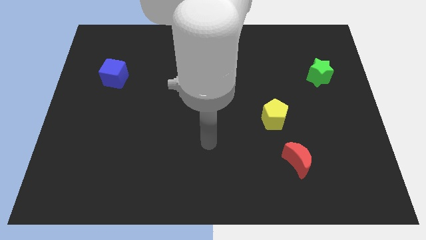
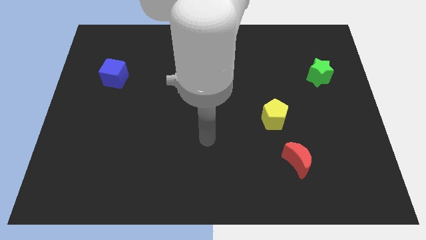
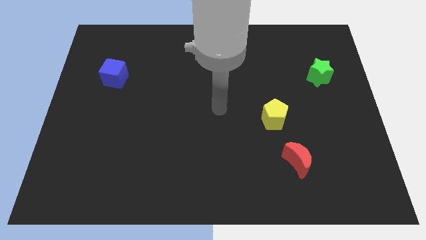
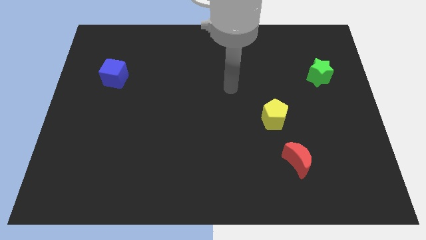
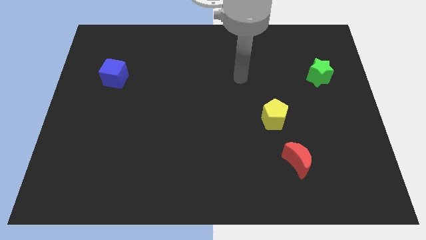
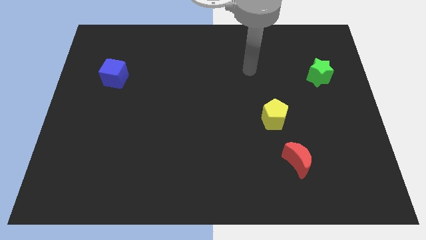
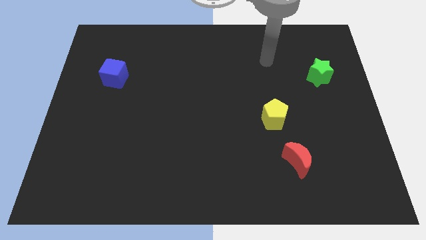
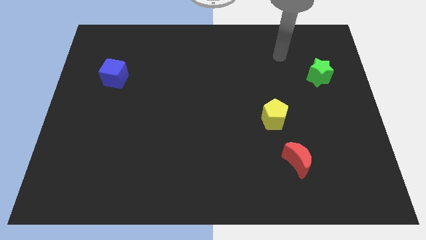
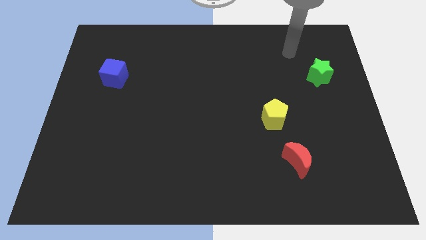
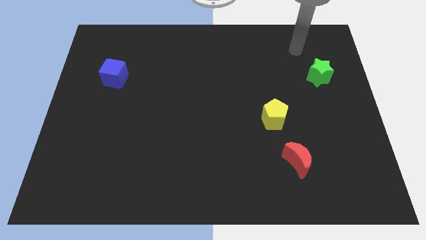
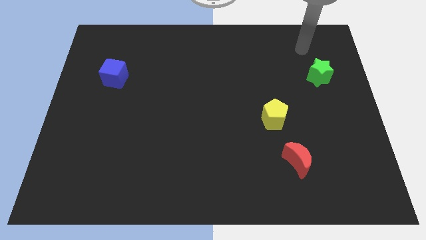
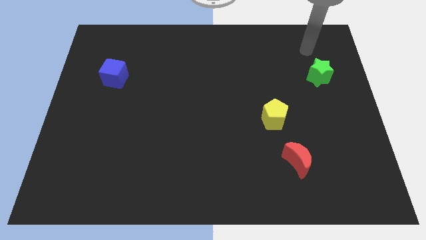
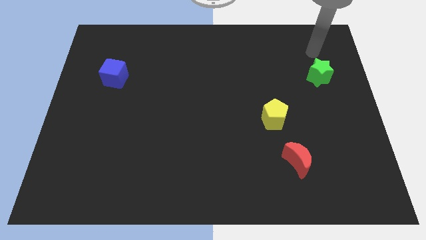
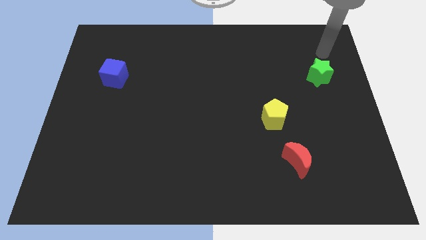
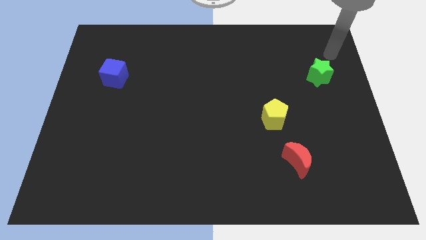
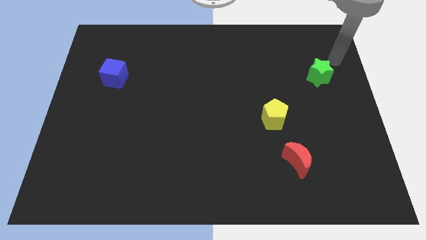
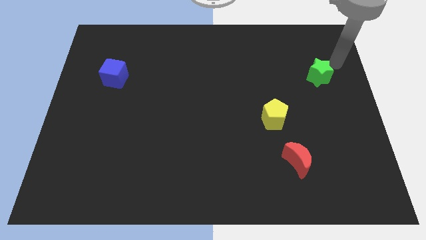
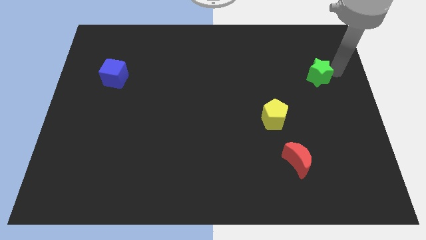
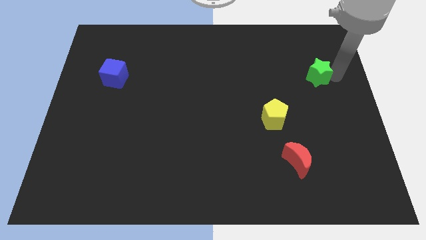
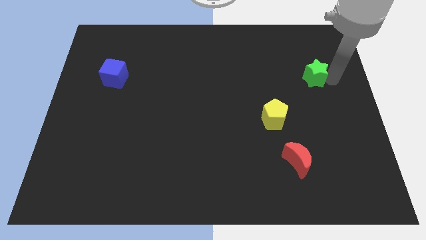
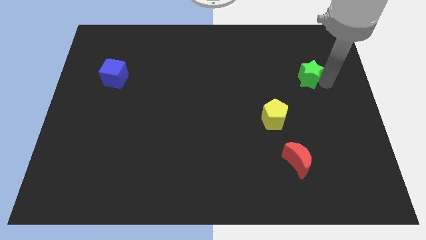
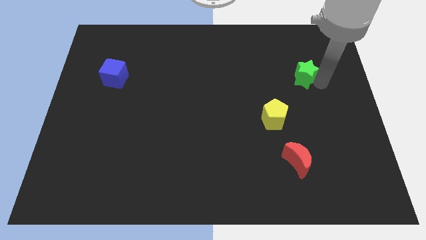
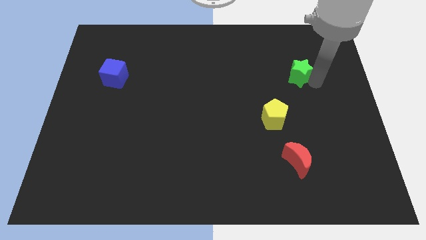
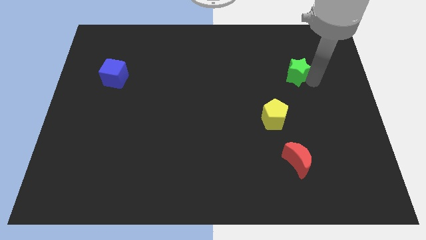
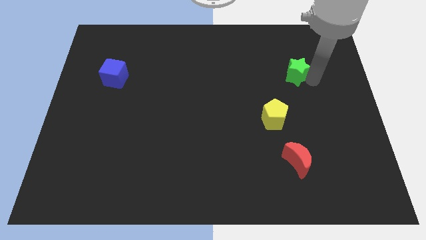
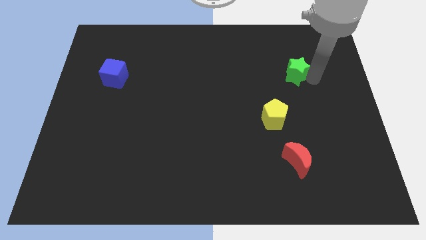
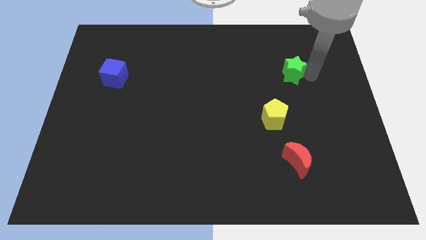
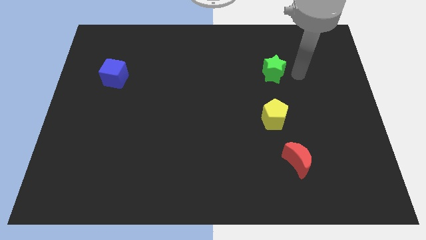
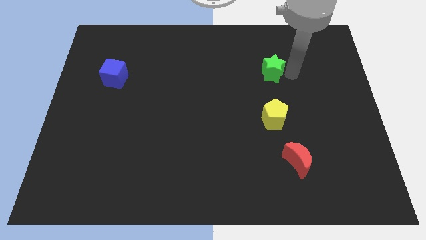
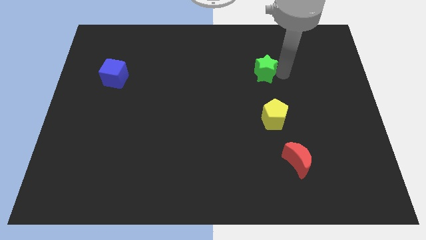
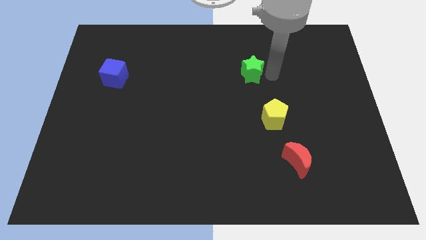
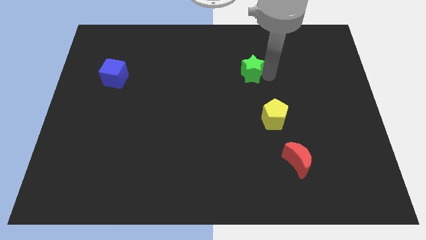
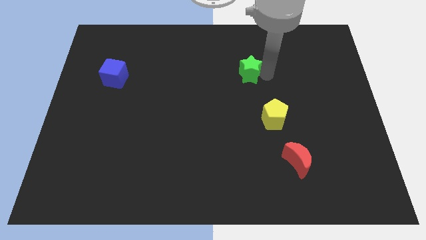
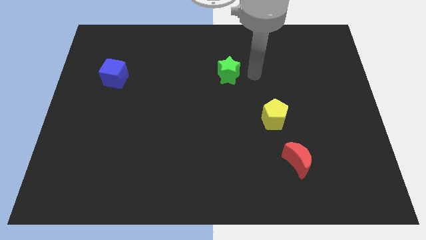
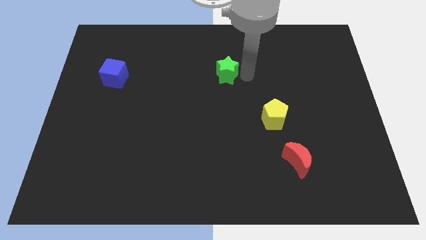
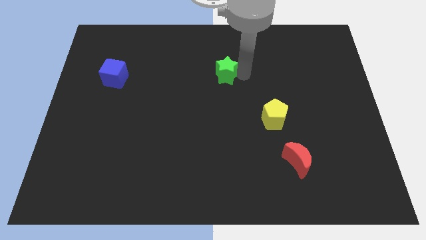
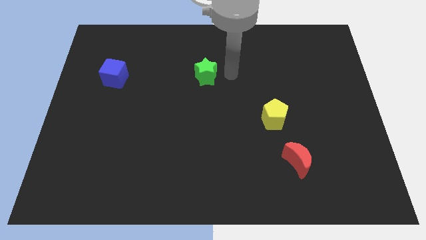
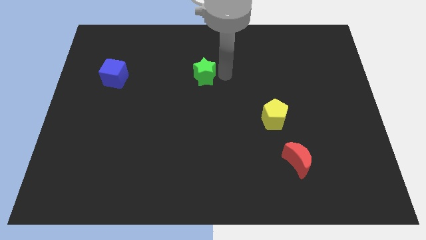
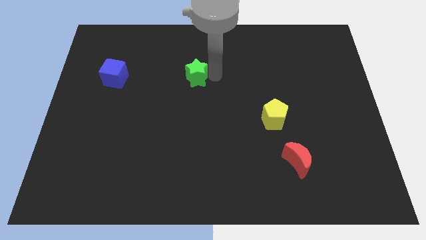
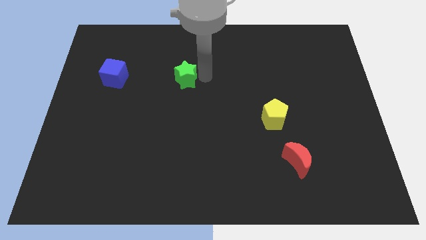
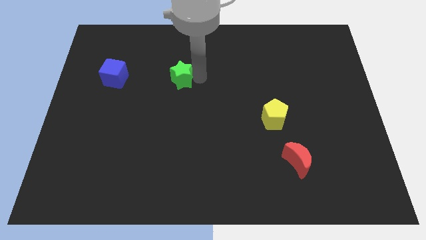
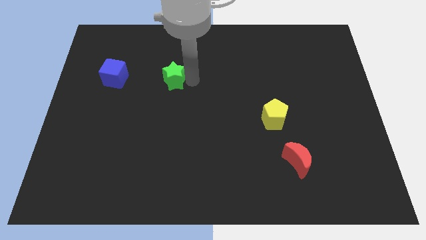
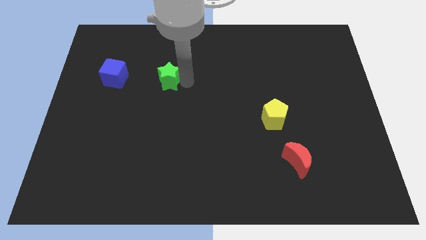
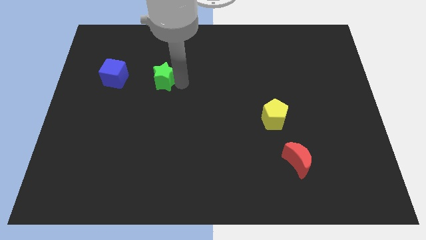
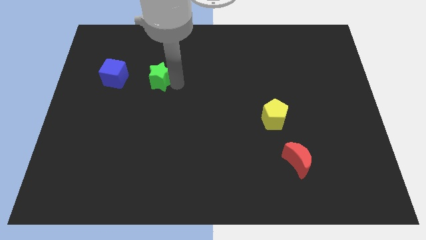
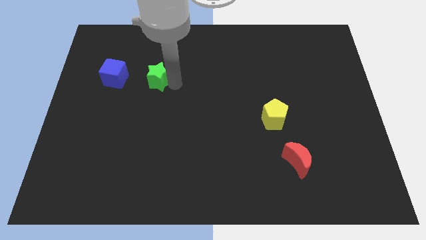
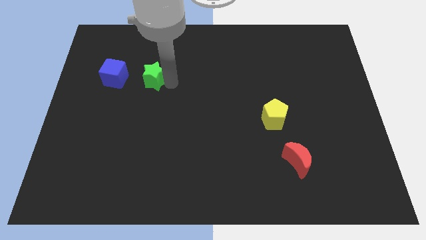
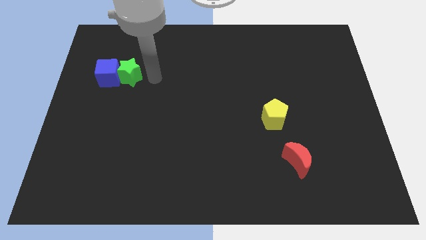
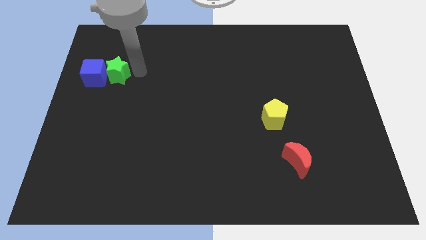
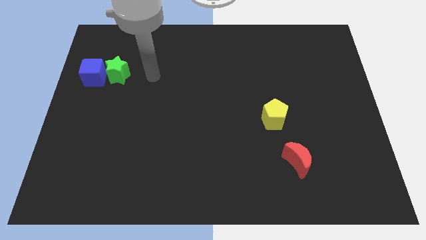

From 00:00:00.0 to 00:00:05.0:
put the star to the cube

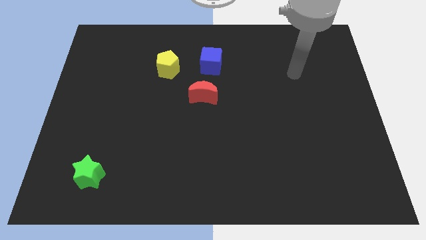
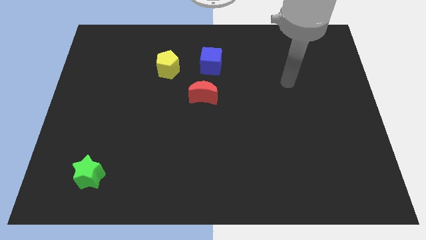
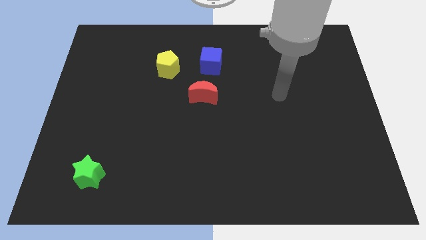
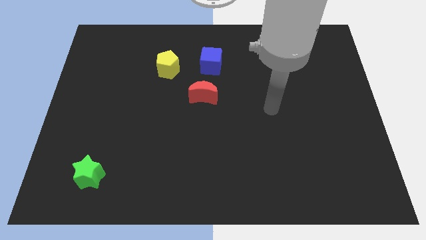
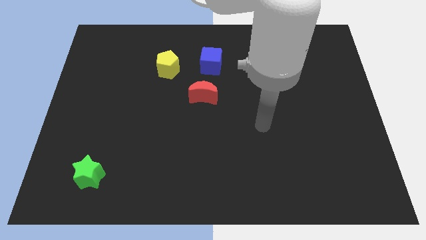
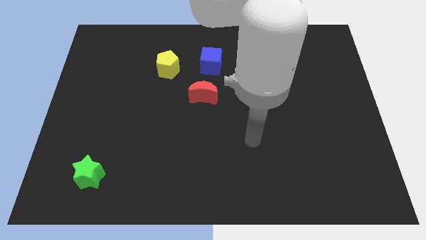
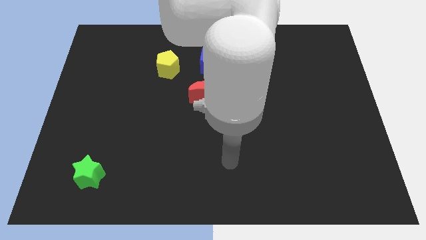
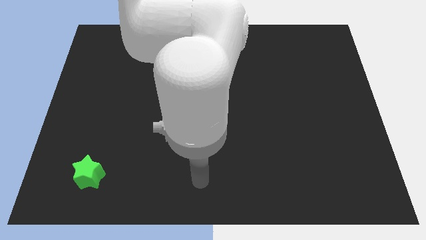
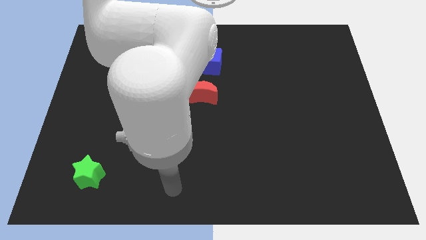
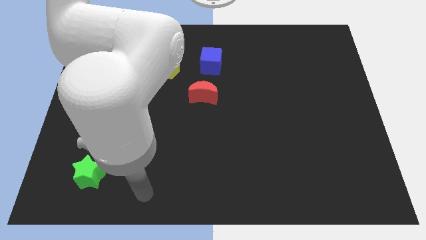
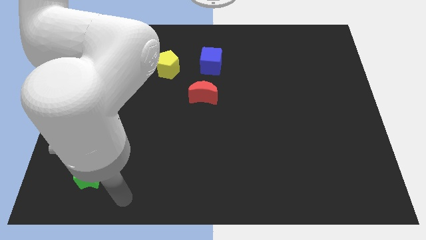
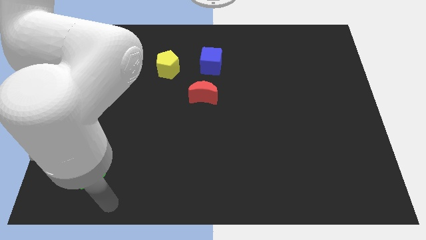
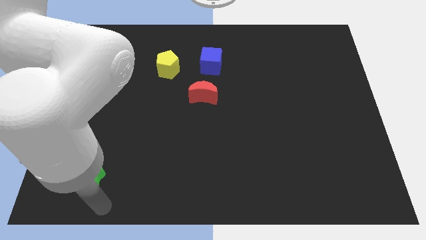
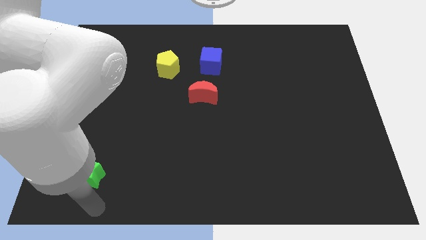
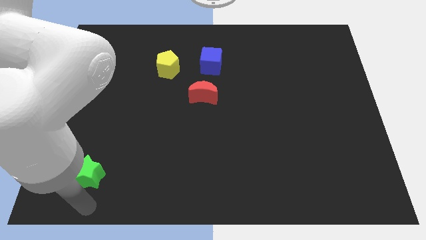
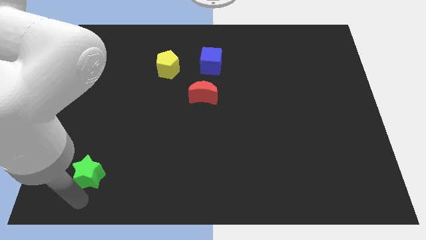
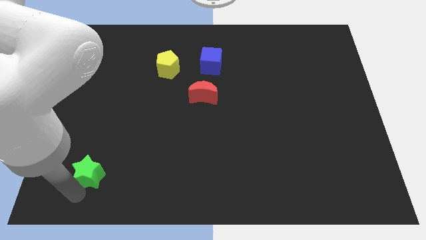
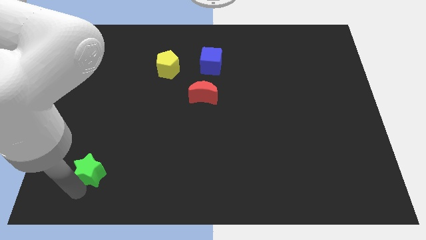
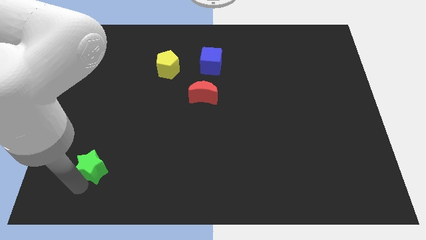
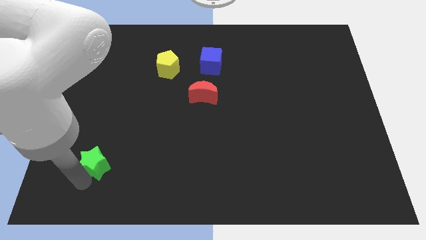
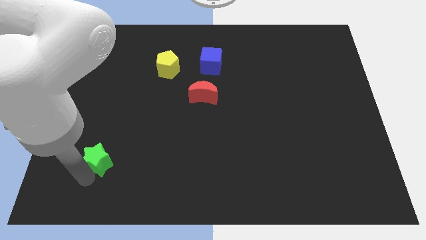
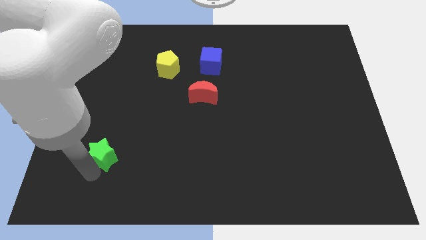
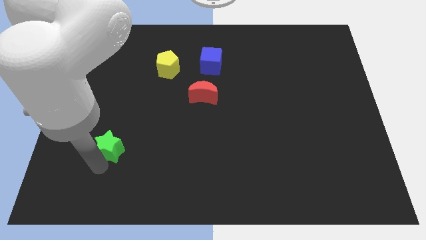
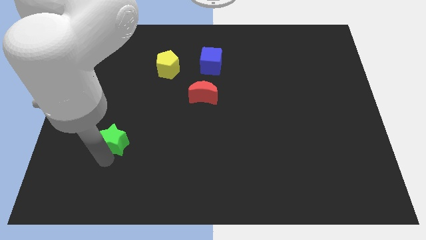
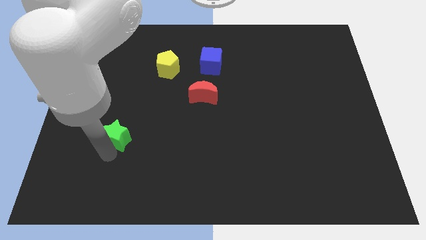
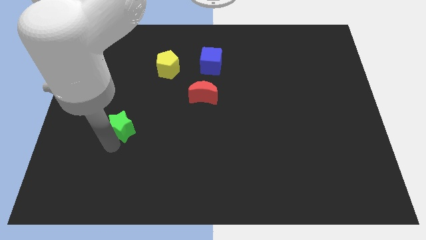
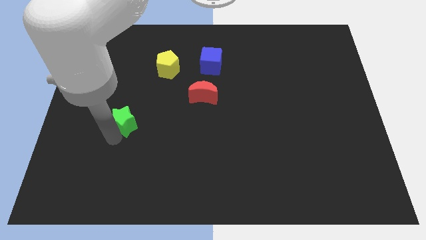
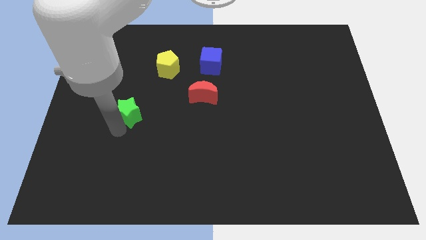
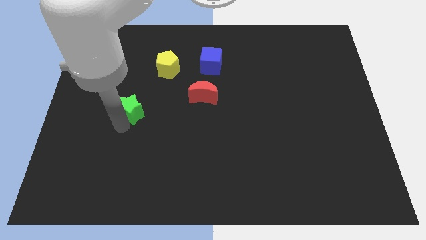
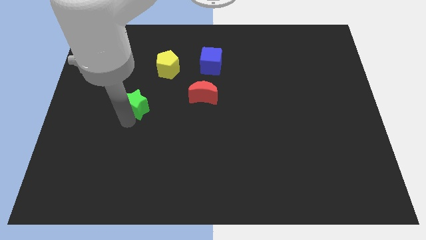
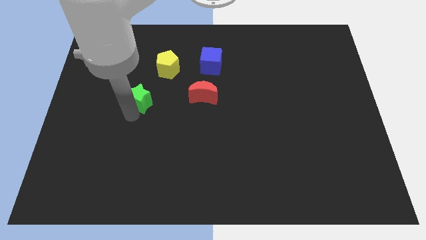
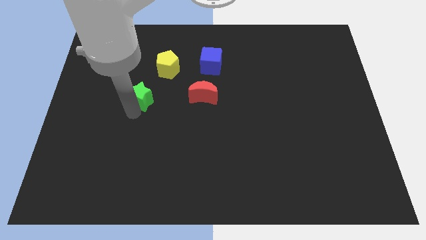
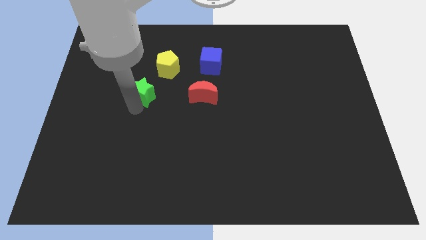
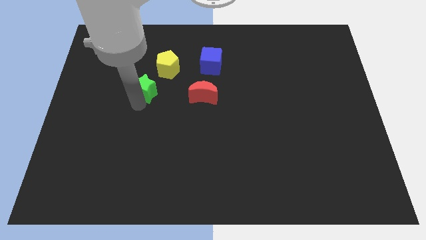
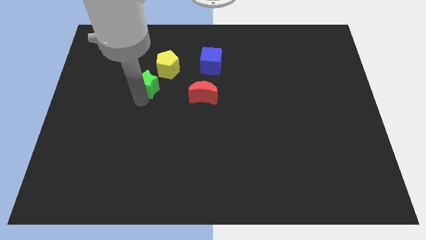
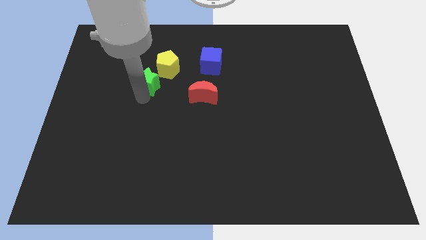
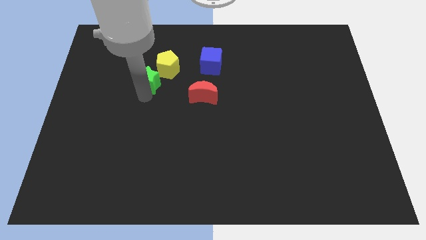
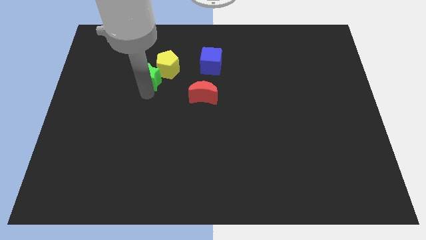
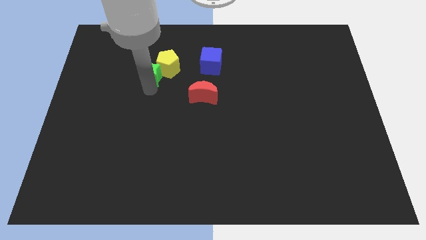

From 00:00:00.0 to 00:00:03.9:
move the green block next to the yellow pentagon
